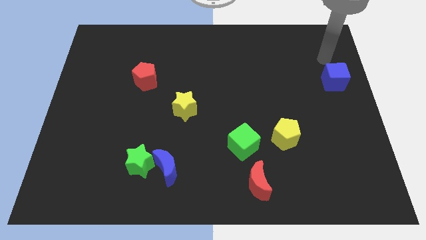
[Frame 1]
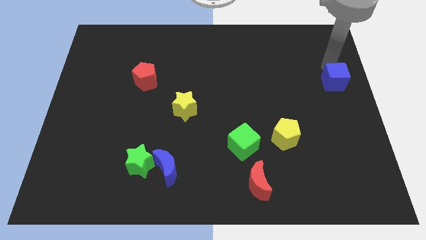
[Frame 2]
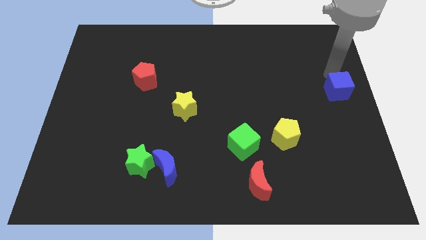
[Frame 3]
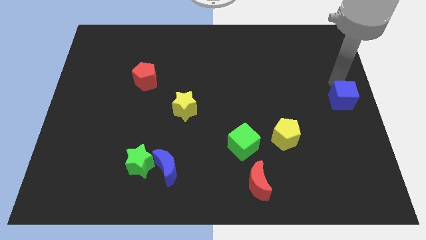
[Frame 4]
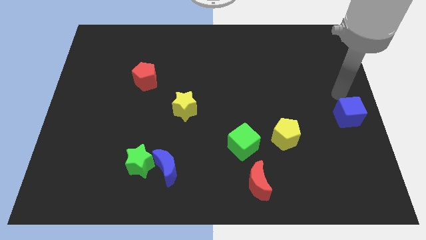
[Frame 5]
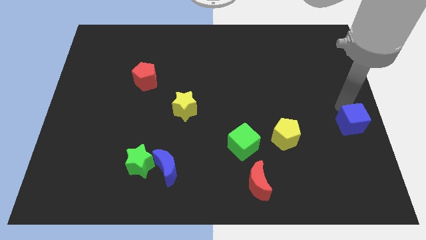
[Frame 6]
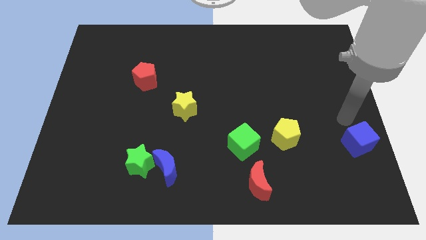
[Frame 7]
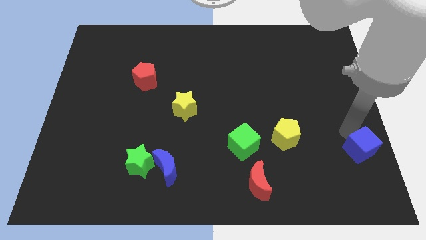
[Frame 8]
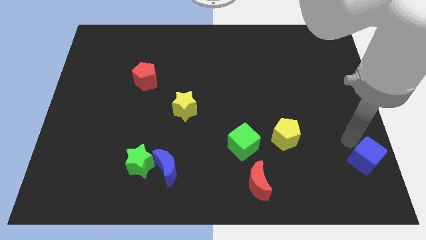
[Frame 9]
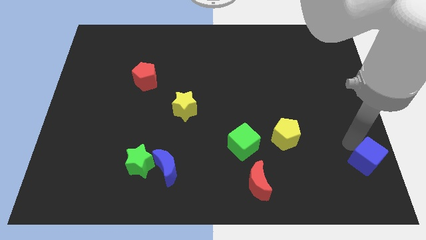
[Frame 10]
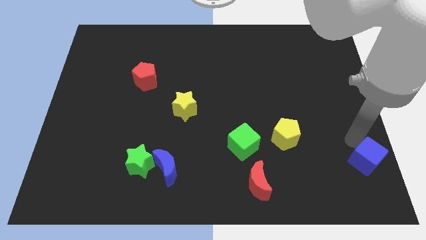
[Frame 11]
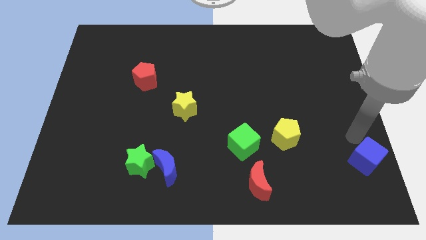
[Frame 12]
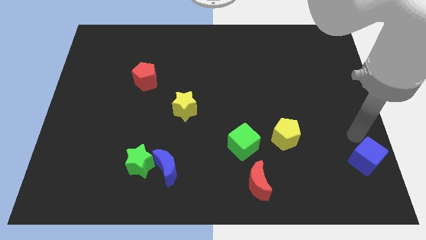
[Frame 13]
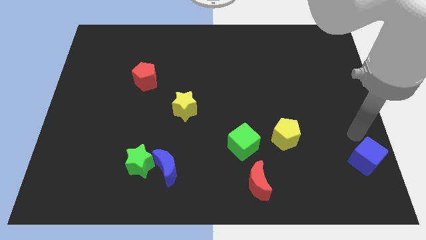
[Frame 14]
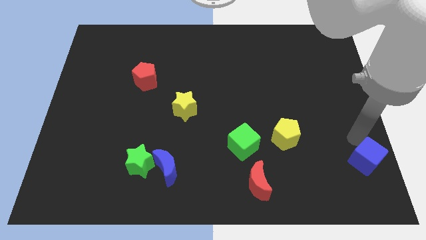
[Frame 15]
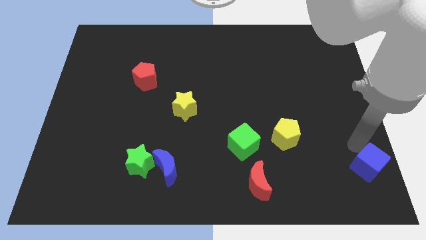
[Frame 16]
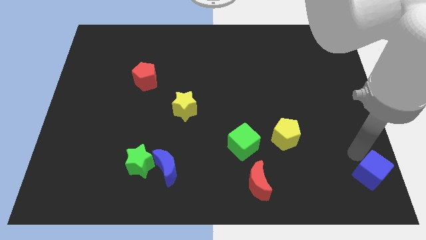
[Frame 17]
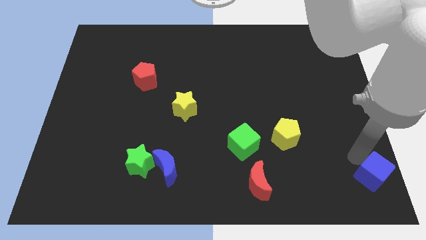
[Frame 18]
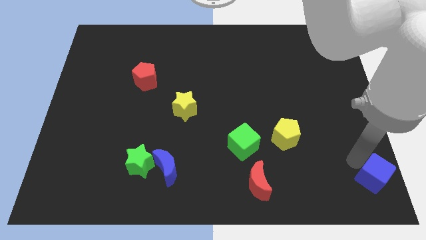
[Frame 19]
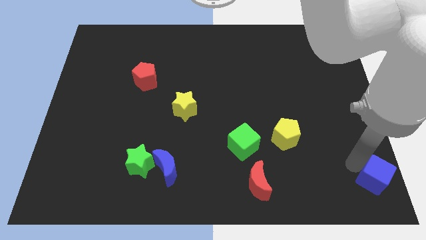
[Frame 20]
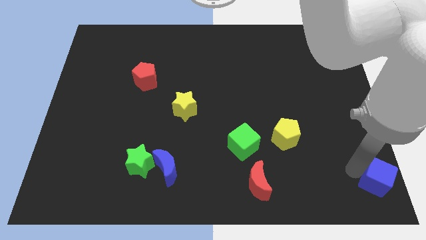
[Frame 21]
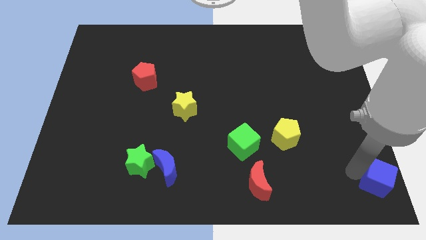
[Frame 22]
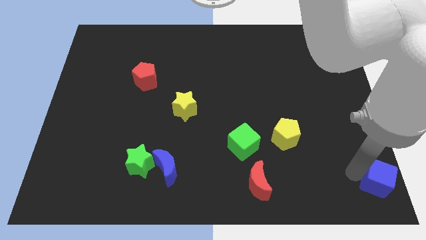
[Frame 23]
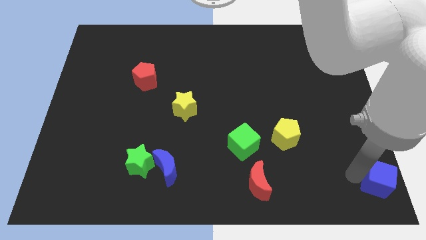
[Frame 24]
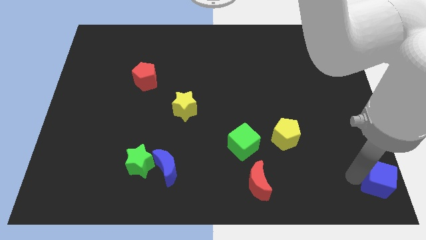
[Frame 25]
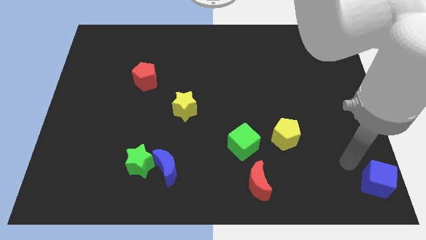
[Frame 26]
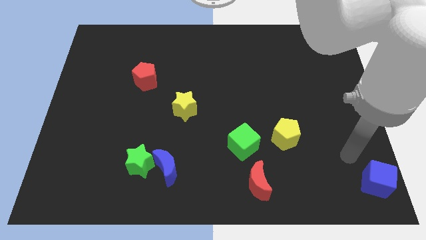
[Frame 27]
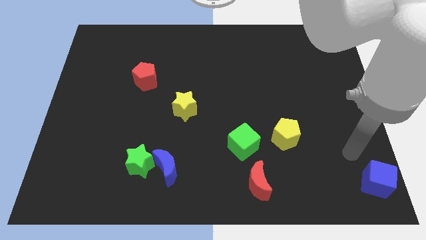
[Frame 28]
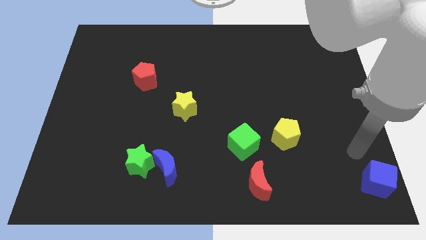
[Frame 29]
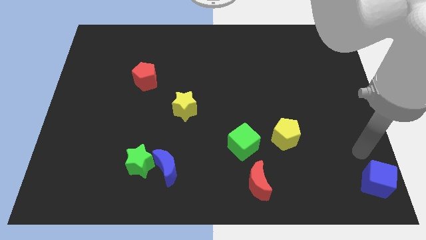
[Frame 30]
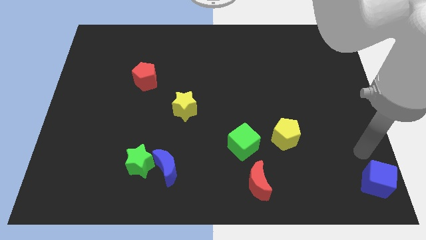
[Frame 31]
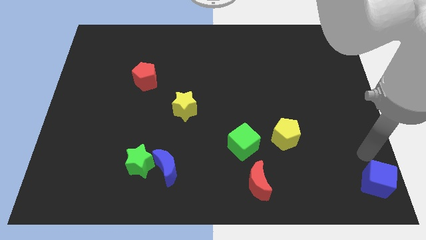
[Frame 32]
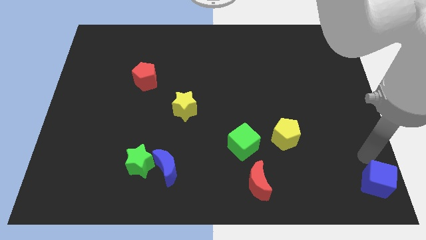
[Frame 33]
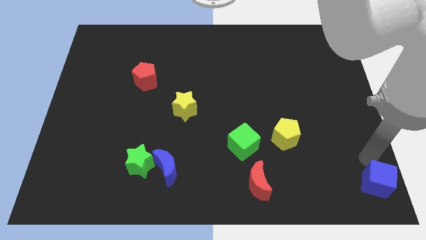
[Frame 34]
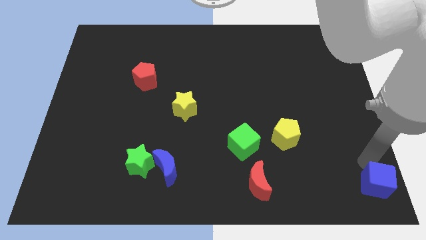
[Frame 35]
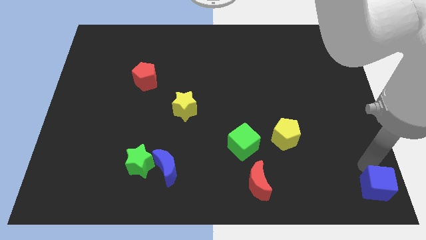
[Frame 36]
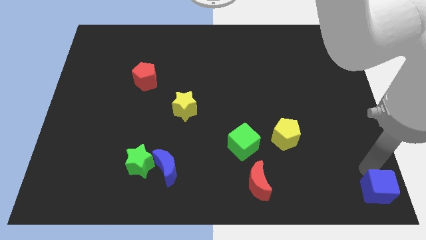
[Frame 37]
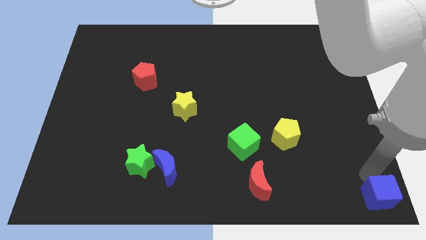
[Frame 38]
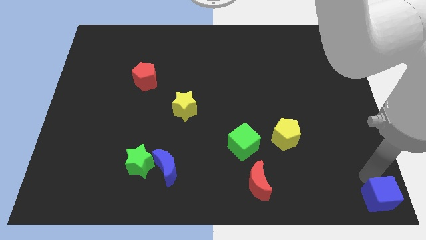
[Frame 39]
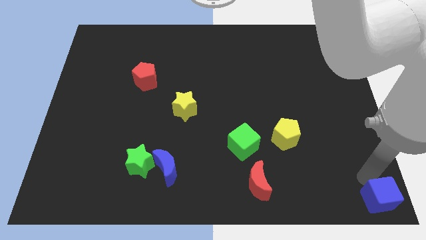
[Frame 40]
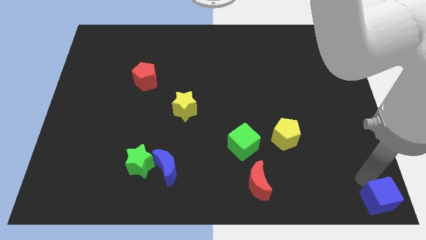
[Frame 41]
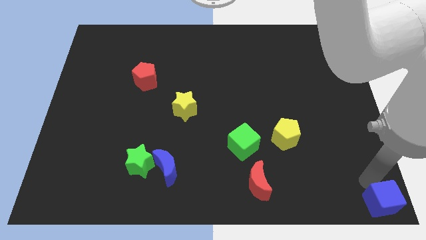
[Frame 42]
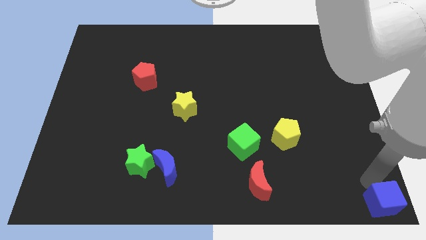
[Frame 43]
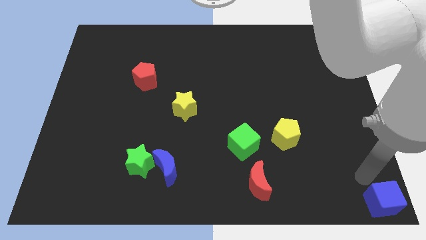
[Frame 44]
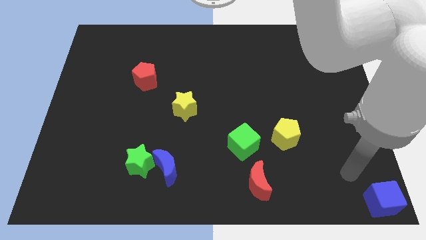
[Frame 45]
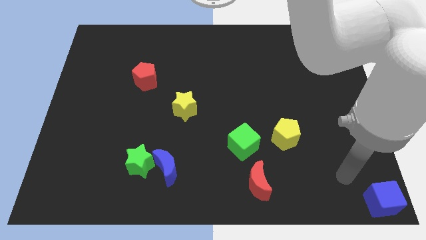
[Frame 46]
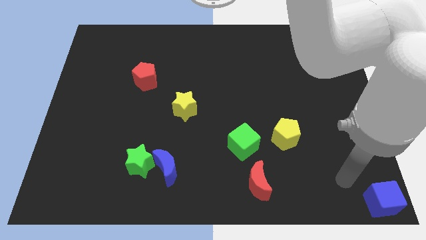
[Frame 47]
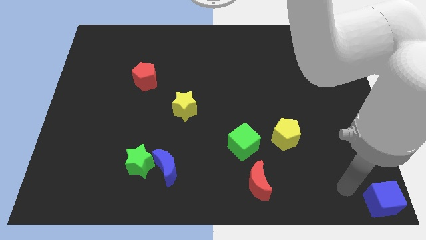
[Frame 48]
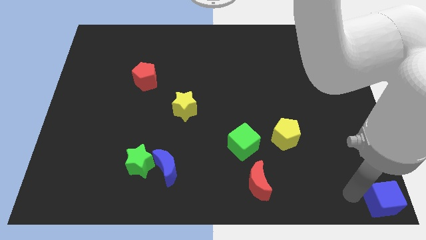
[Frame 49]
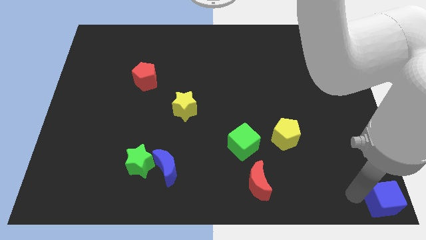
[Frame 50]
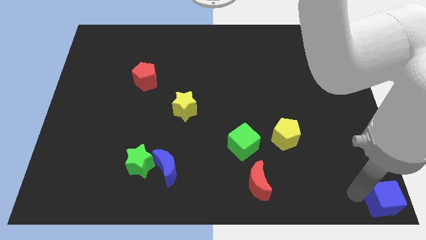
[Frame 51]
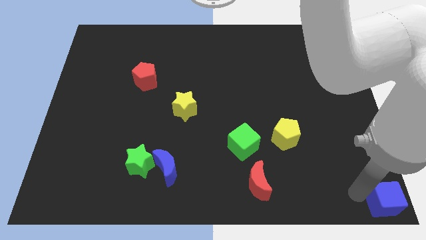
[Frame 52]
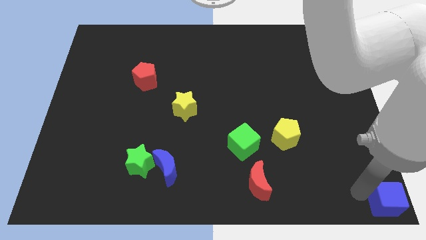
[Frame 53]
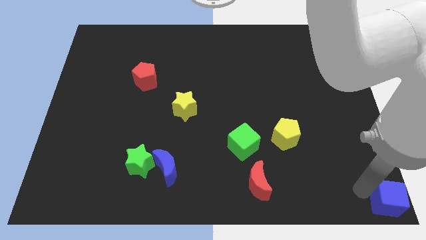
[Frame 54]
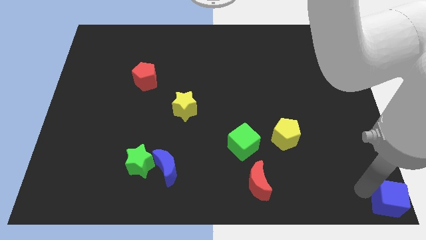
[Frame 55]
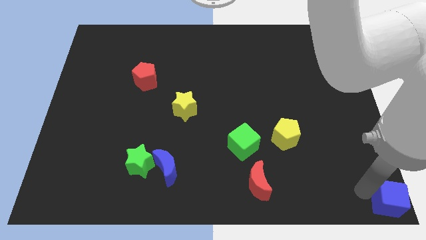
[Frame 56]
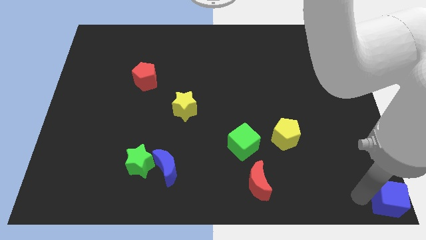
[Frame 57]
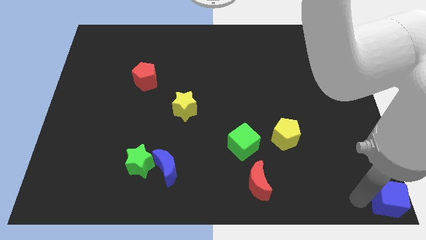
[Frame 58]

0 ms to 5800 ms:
place the blue cube at the bottom right corner of the board

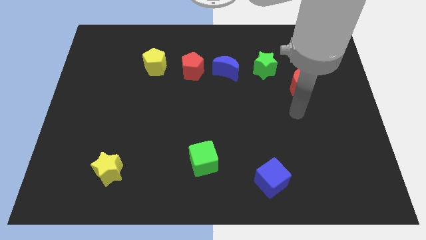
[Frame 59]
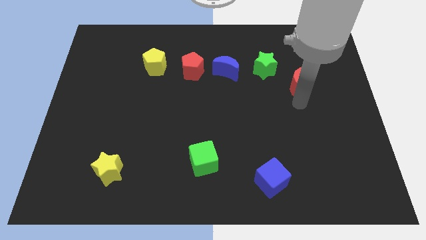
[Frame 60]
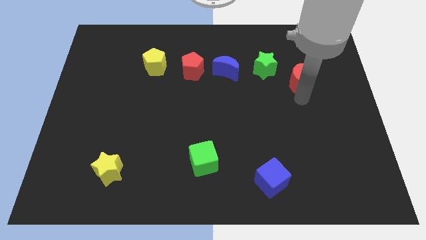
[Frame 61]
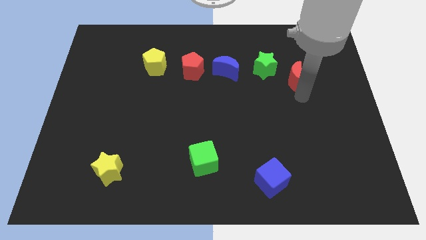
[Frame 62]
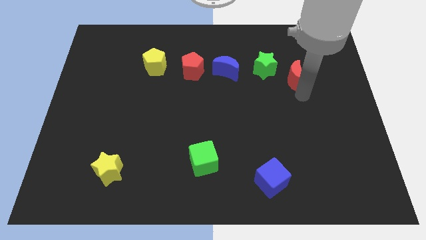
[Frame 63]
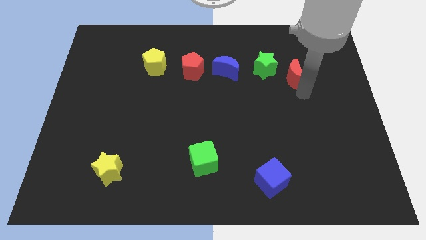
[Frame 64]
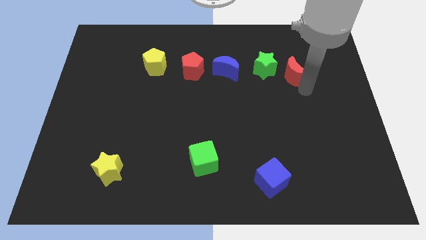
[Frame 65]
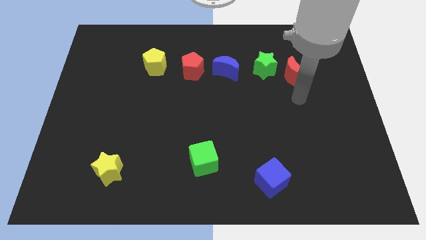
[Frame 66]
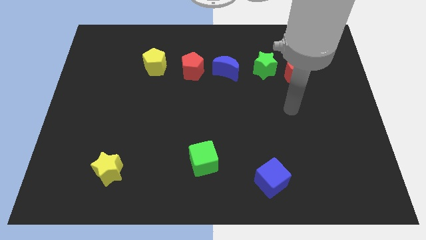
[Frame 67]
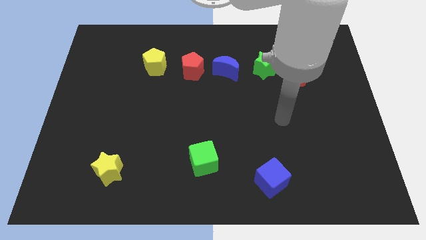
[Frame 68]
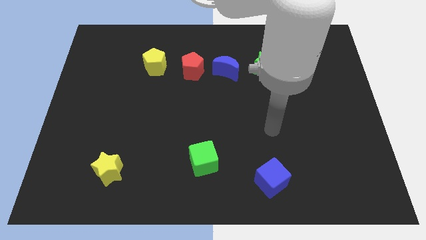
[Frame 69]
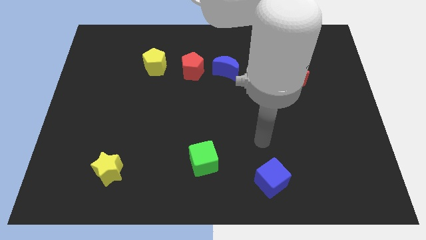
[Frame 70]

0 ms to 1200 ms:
move arm towards green cube

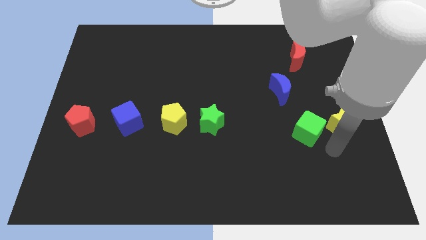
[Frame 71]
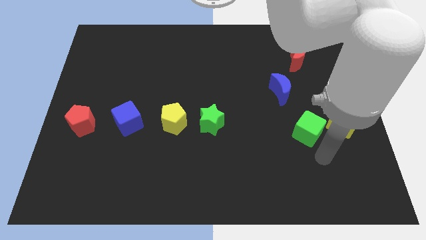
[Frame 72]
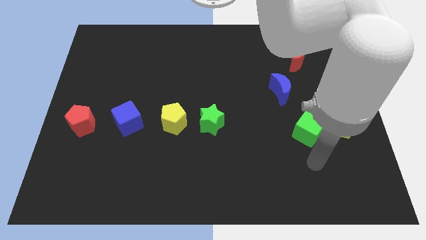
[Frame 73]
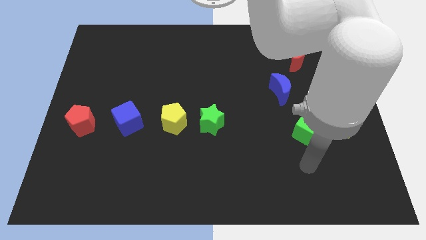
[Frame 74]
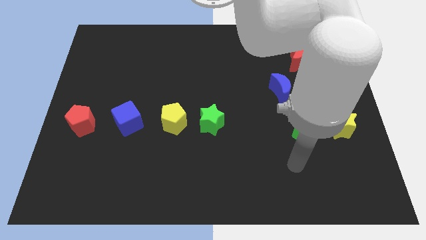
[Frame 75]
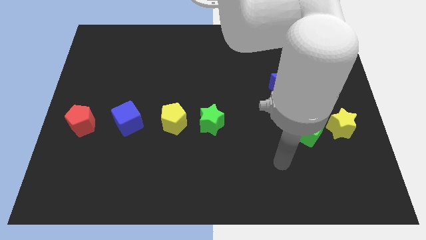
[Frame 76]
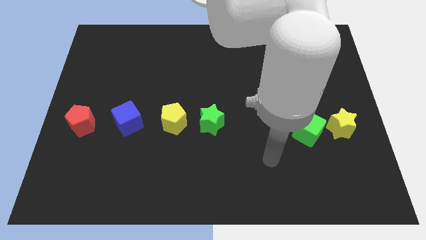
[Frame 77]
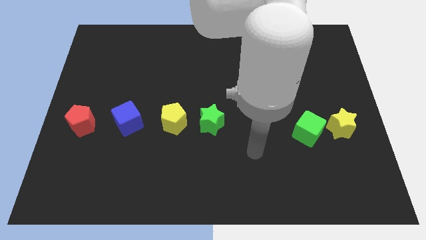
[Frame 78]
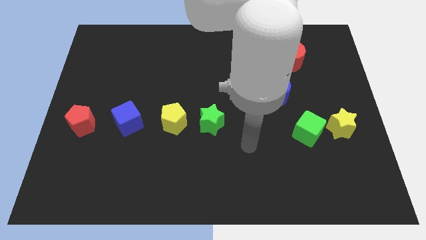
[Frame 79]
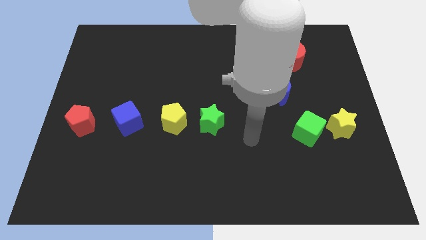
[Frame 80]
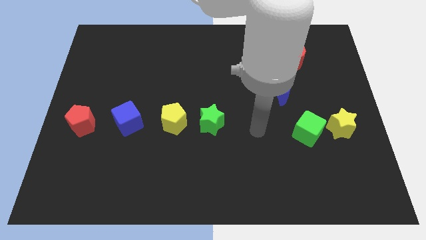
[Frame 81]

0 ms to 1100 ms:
push your hand in between the green star and green cube

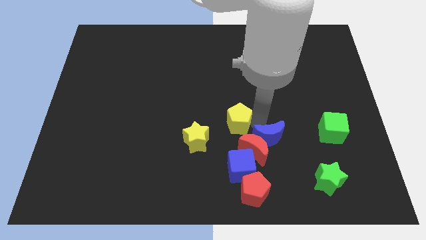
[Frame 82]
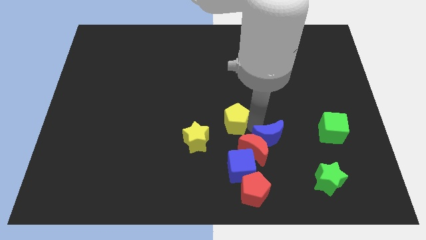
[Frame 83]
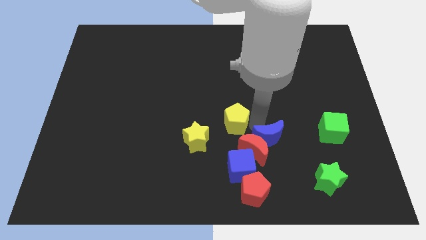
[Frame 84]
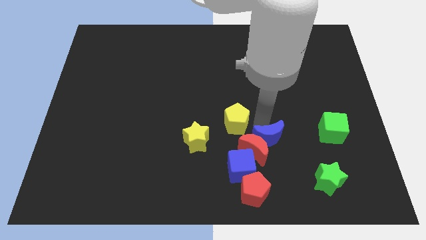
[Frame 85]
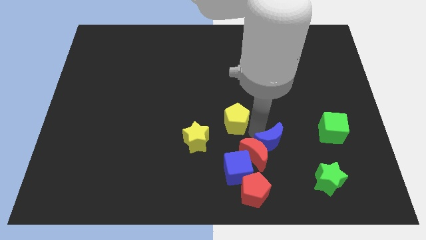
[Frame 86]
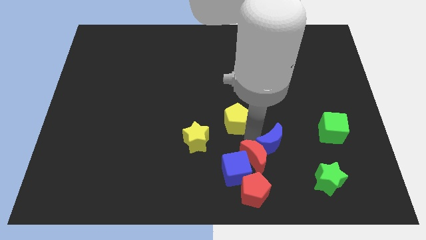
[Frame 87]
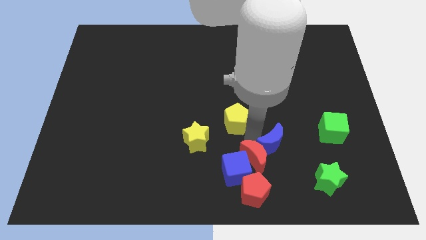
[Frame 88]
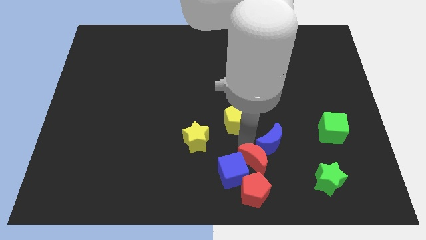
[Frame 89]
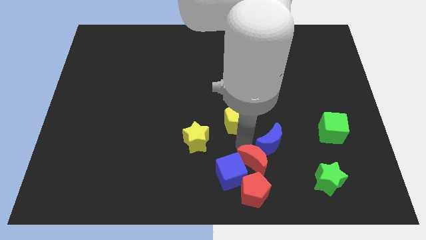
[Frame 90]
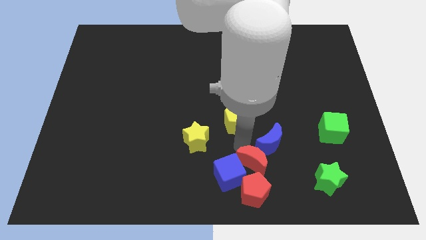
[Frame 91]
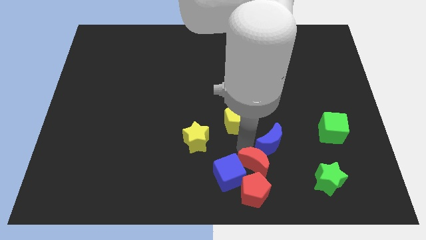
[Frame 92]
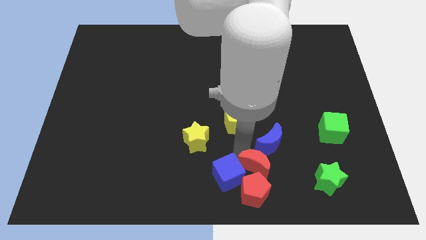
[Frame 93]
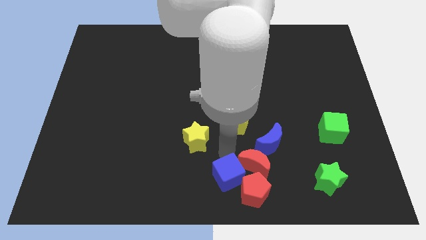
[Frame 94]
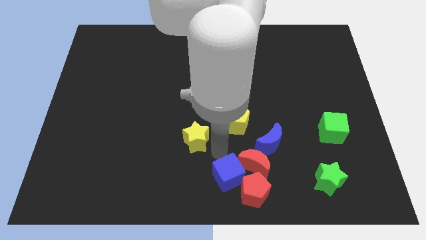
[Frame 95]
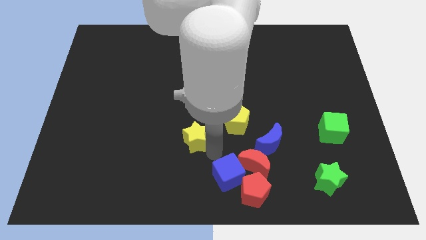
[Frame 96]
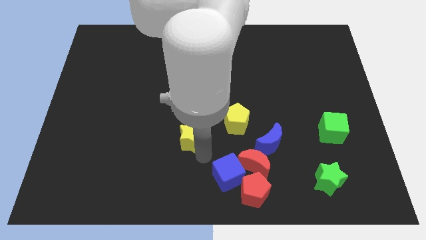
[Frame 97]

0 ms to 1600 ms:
separate the yellow pentagon from the group of blocks
